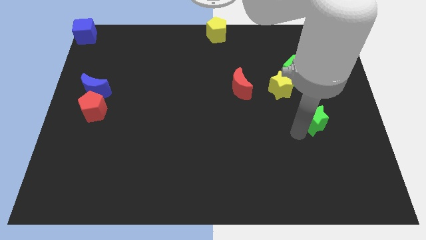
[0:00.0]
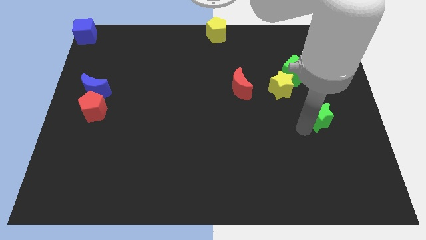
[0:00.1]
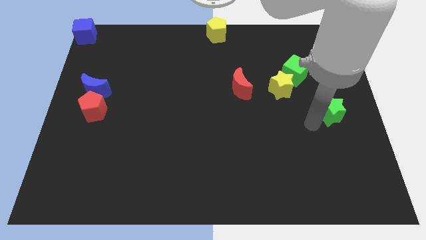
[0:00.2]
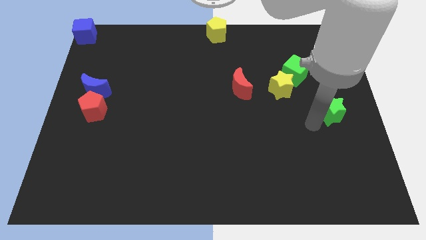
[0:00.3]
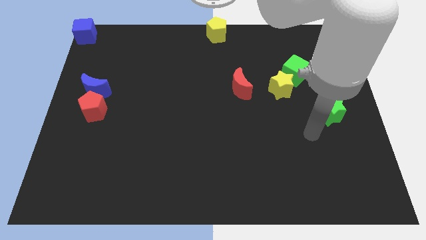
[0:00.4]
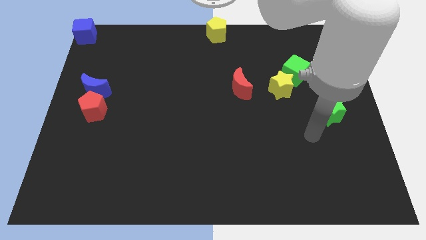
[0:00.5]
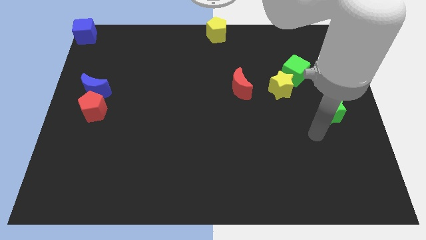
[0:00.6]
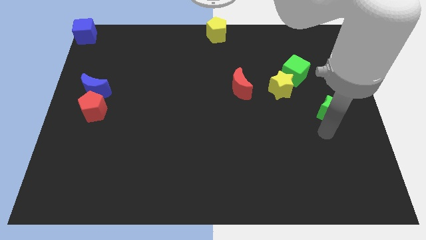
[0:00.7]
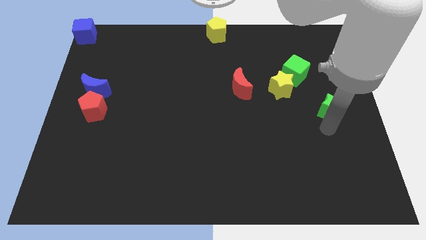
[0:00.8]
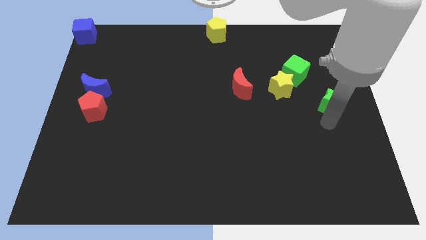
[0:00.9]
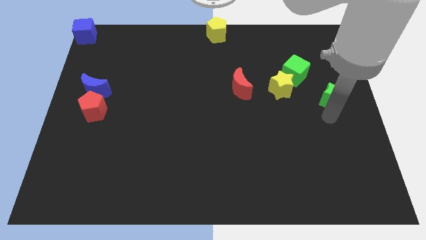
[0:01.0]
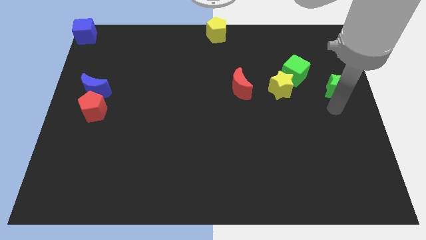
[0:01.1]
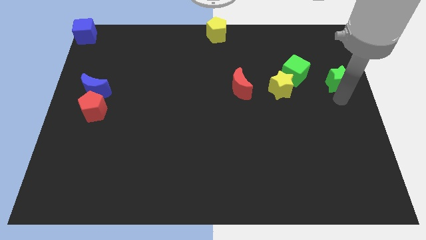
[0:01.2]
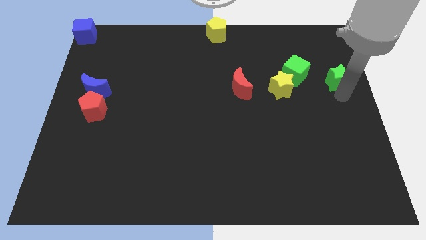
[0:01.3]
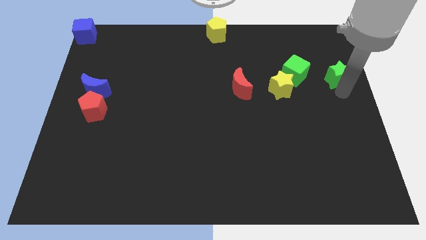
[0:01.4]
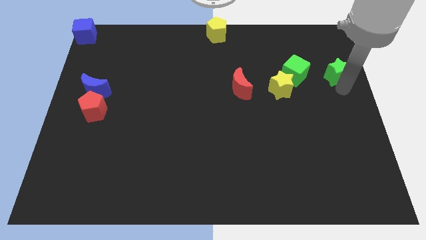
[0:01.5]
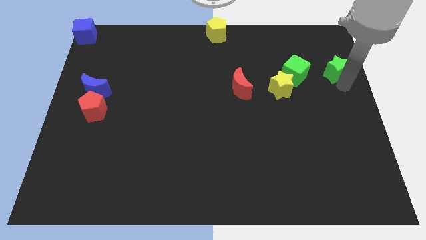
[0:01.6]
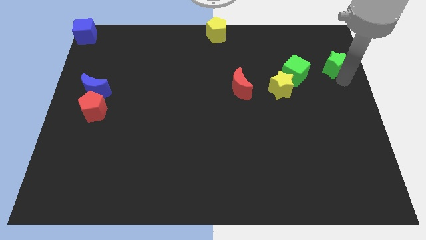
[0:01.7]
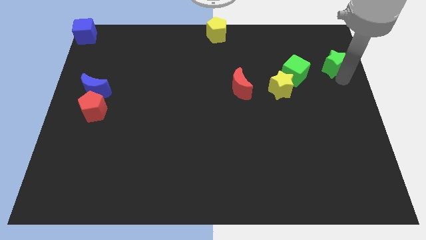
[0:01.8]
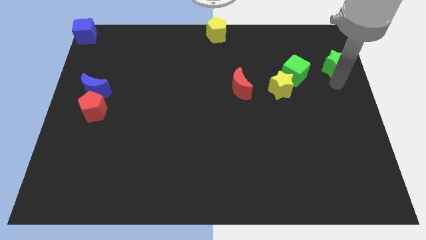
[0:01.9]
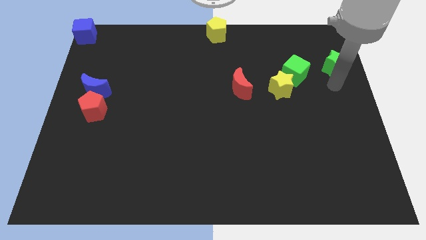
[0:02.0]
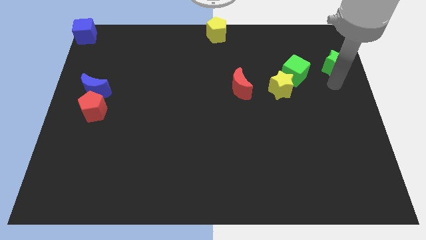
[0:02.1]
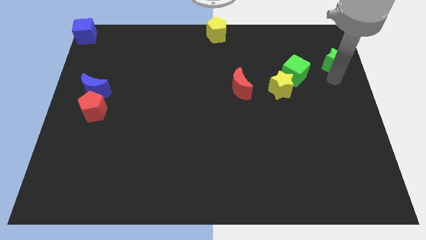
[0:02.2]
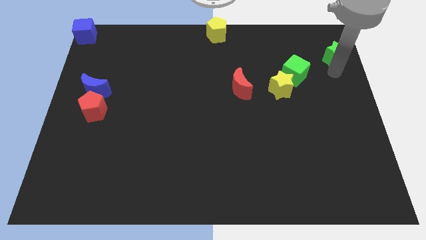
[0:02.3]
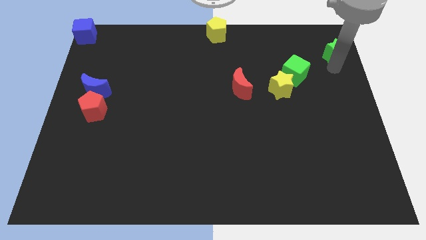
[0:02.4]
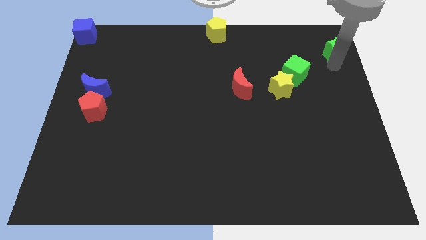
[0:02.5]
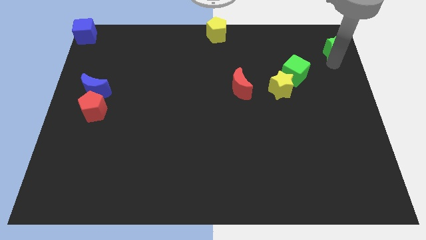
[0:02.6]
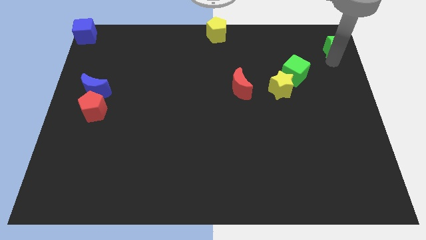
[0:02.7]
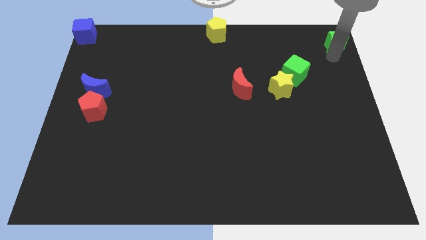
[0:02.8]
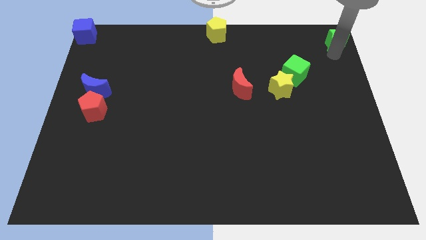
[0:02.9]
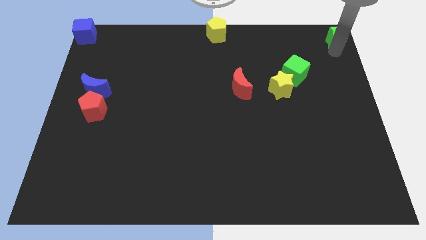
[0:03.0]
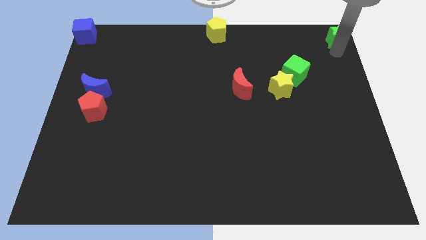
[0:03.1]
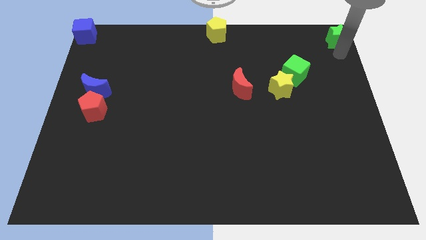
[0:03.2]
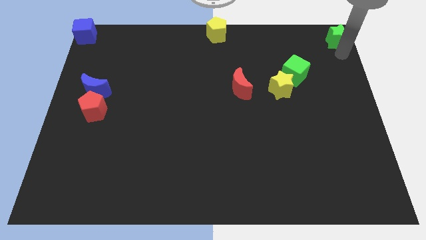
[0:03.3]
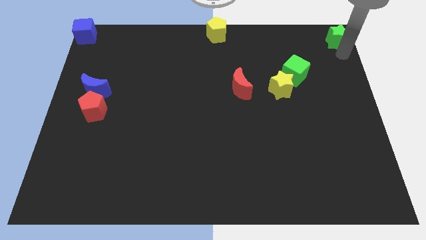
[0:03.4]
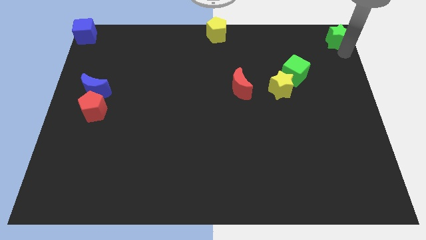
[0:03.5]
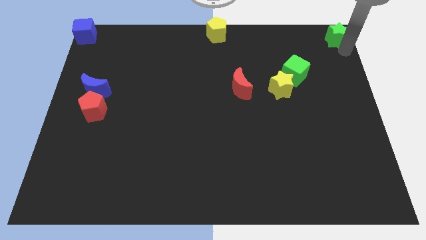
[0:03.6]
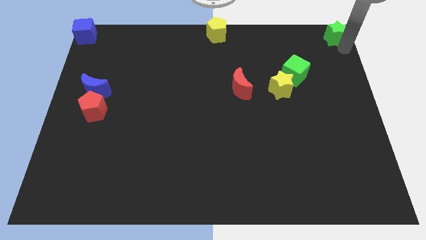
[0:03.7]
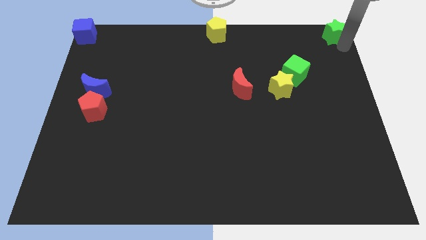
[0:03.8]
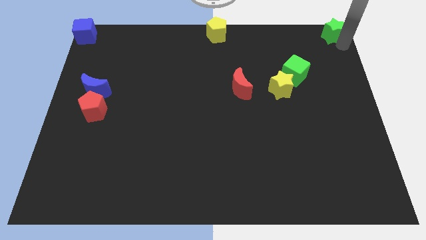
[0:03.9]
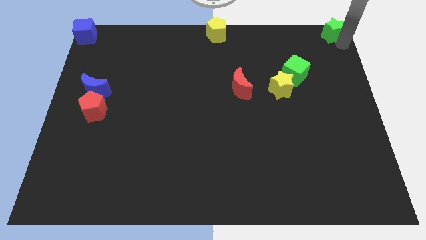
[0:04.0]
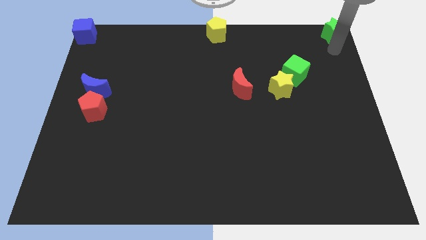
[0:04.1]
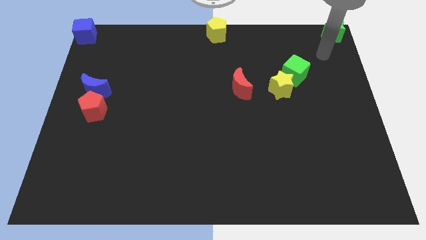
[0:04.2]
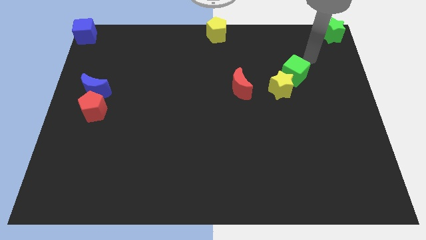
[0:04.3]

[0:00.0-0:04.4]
move the green star to the top right corner

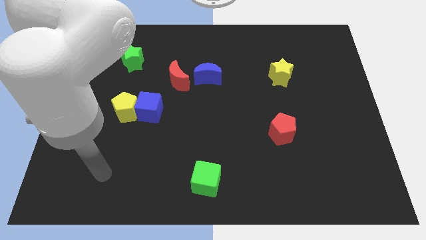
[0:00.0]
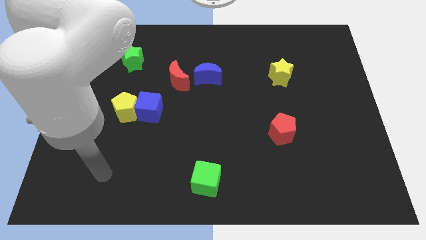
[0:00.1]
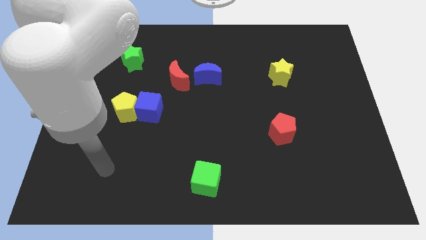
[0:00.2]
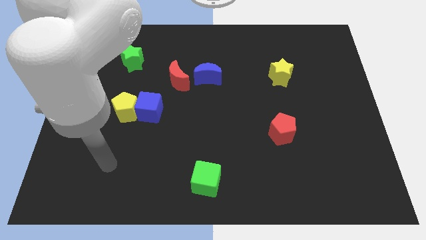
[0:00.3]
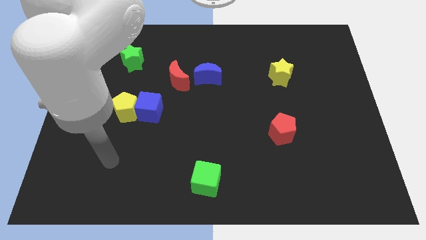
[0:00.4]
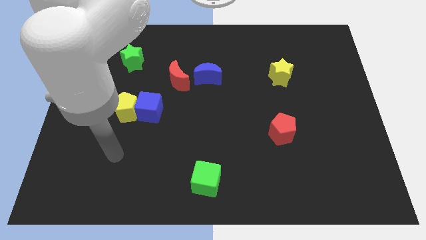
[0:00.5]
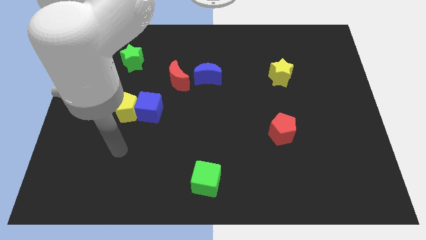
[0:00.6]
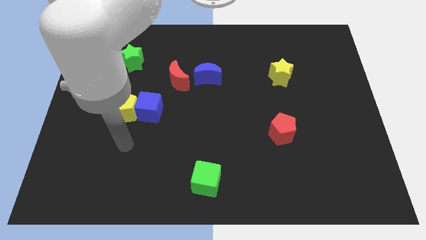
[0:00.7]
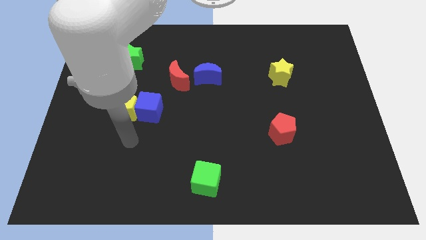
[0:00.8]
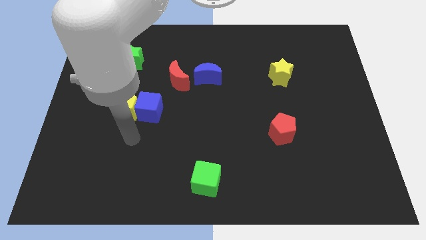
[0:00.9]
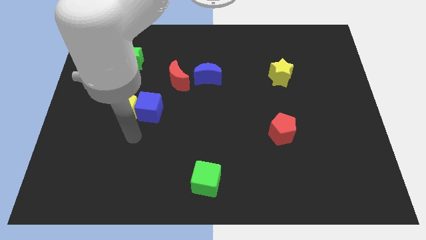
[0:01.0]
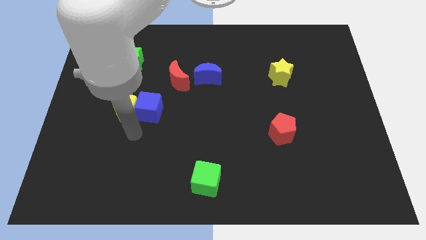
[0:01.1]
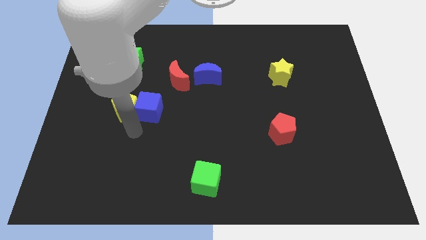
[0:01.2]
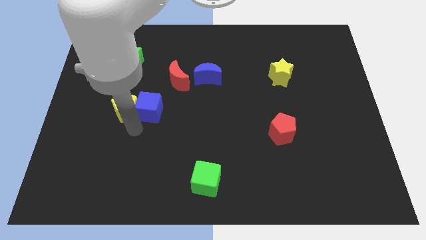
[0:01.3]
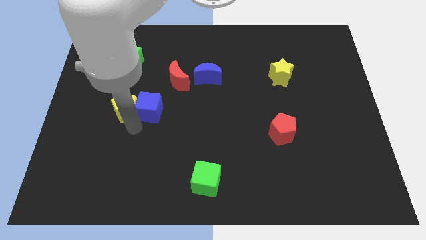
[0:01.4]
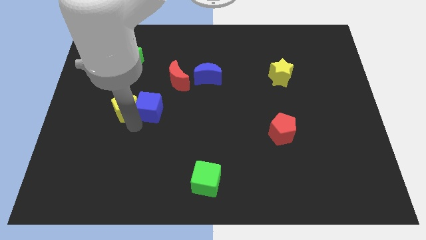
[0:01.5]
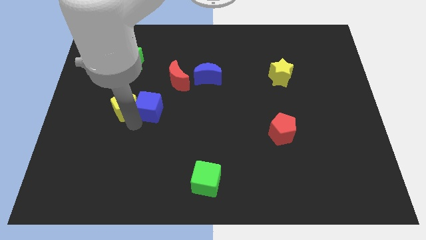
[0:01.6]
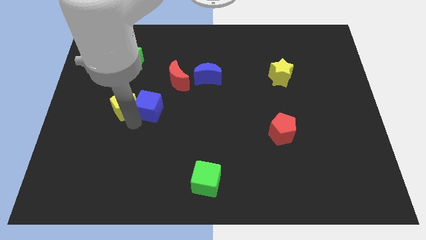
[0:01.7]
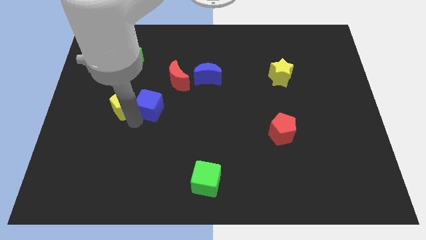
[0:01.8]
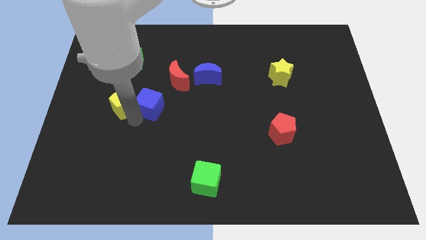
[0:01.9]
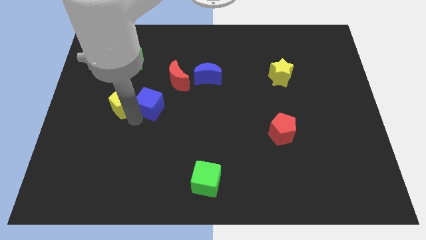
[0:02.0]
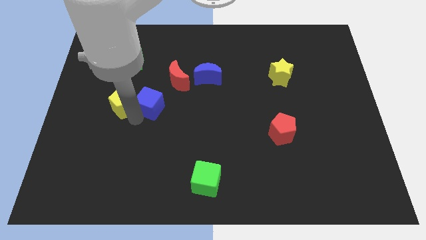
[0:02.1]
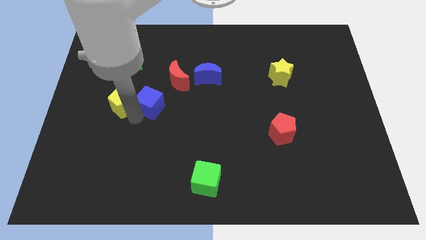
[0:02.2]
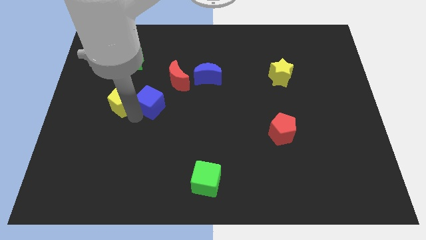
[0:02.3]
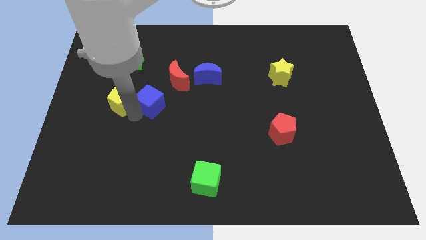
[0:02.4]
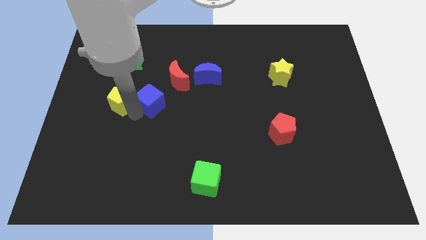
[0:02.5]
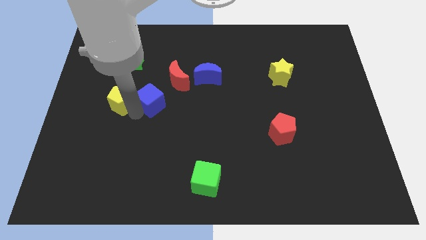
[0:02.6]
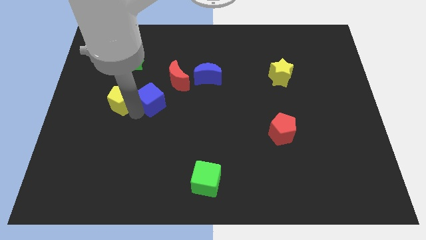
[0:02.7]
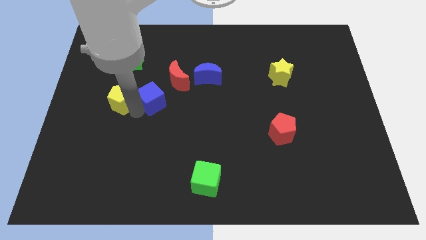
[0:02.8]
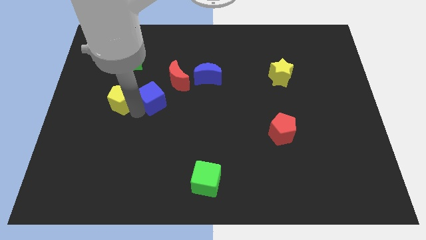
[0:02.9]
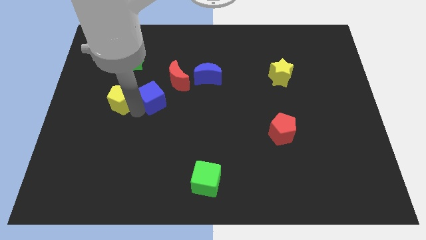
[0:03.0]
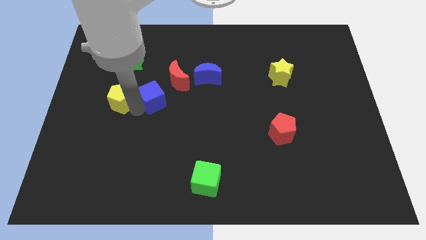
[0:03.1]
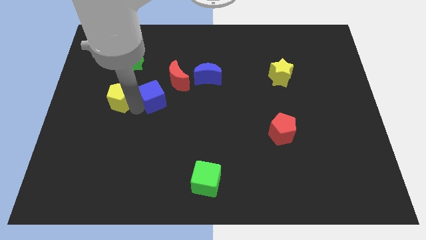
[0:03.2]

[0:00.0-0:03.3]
push the blue cube slightly to the top

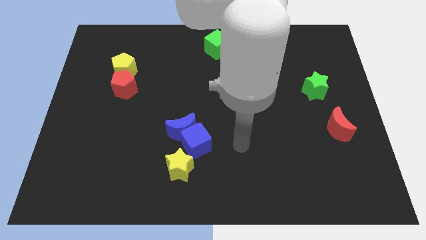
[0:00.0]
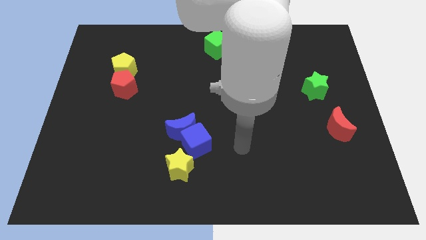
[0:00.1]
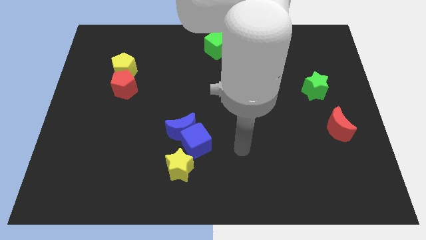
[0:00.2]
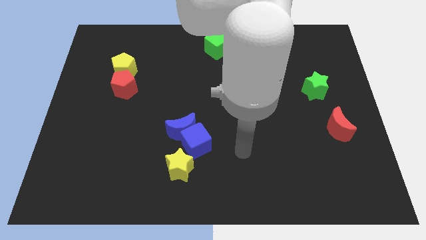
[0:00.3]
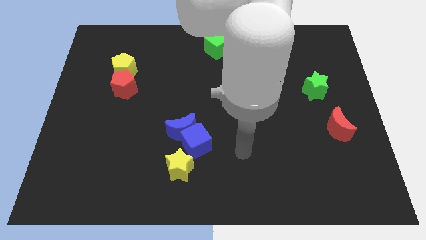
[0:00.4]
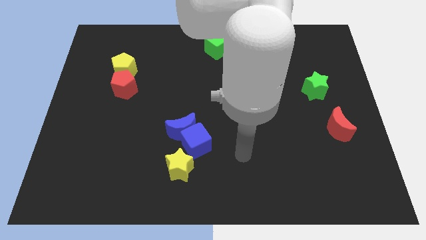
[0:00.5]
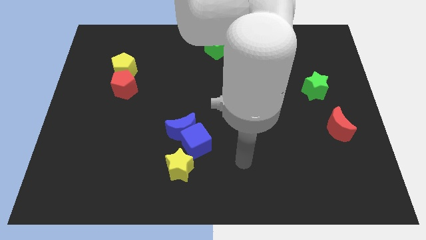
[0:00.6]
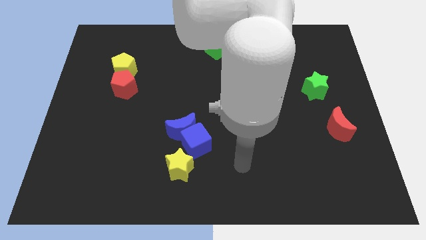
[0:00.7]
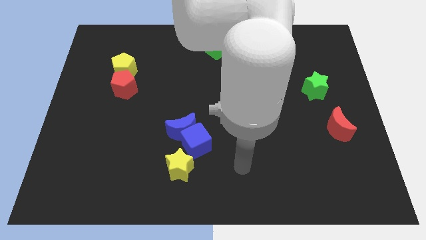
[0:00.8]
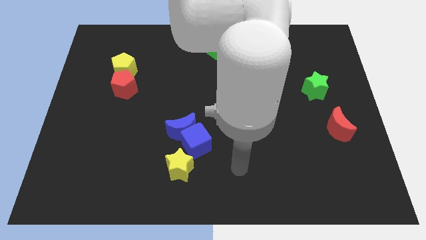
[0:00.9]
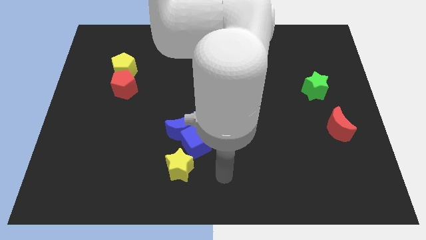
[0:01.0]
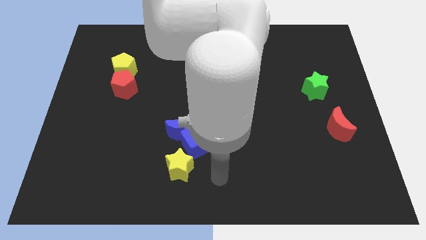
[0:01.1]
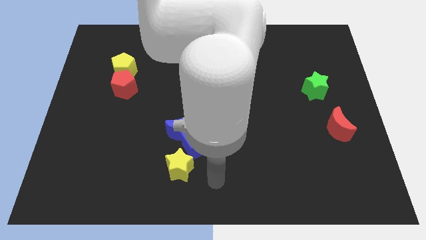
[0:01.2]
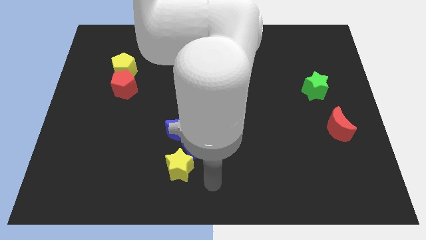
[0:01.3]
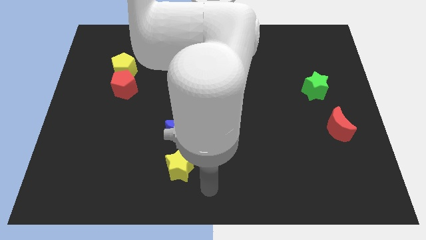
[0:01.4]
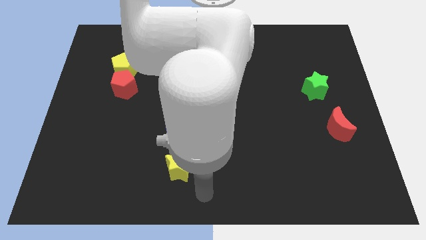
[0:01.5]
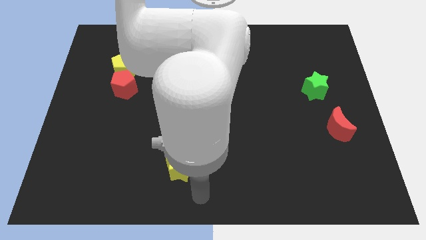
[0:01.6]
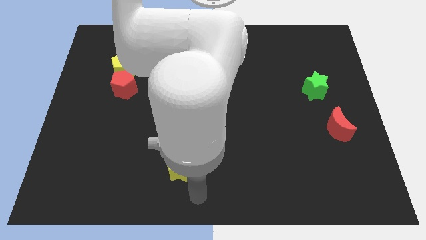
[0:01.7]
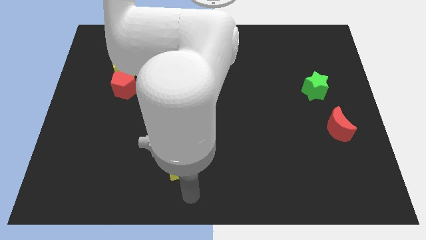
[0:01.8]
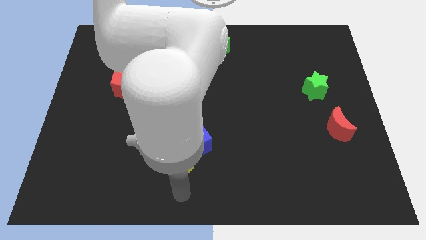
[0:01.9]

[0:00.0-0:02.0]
point your hand below the yellow pentagon
